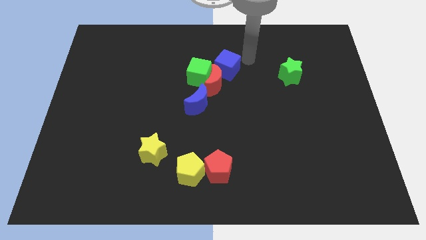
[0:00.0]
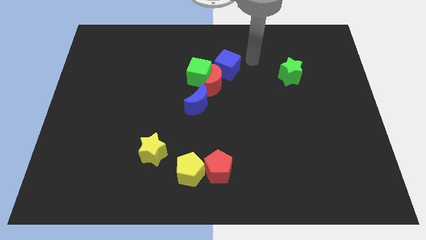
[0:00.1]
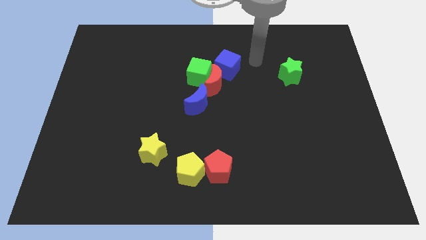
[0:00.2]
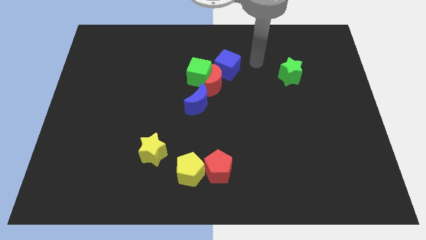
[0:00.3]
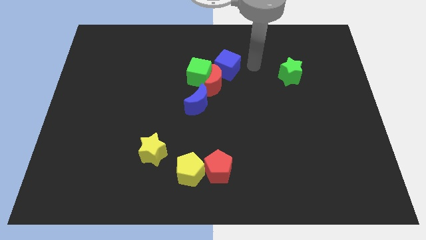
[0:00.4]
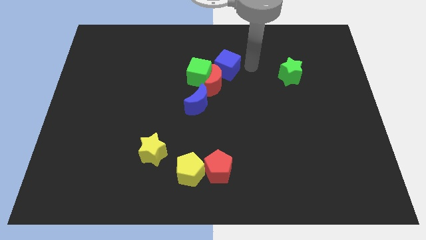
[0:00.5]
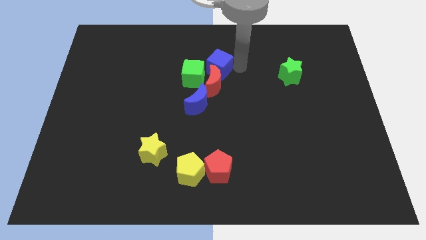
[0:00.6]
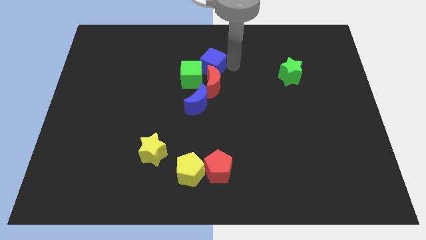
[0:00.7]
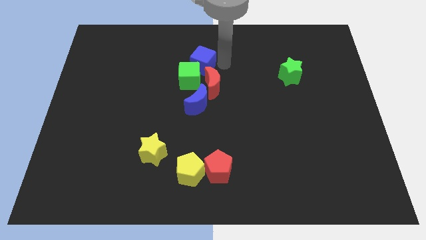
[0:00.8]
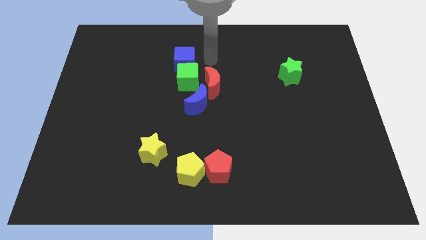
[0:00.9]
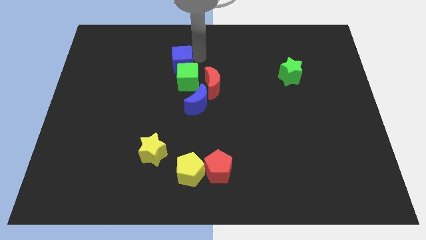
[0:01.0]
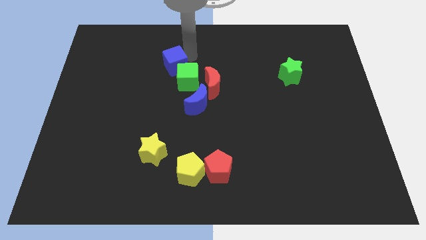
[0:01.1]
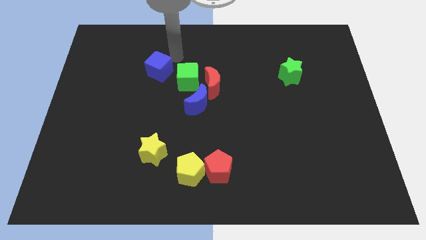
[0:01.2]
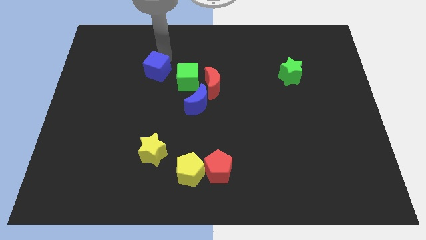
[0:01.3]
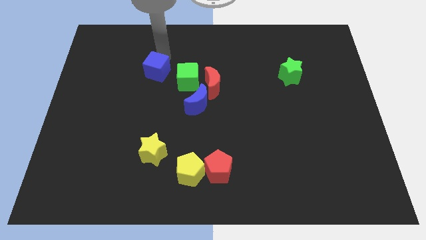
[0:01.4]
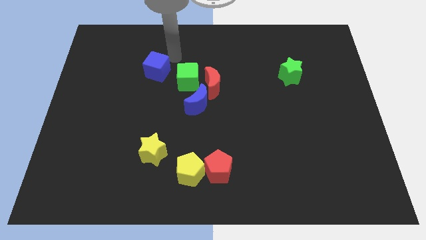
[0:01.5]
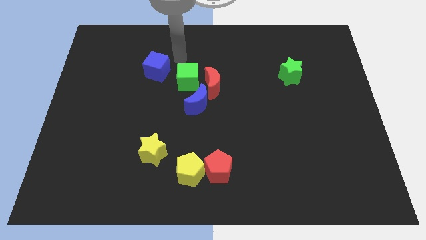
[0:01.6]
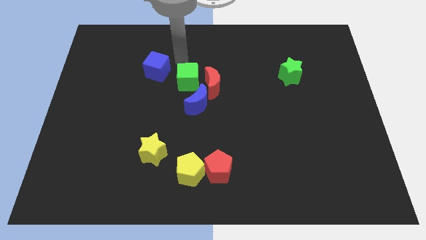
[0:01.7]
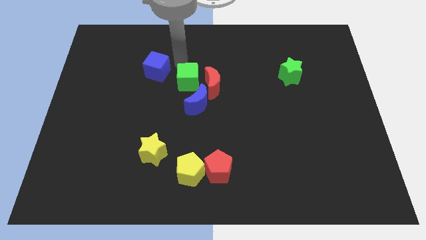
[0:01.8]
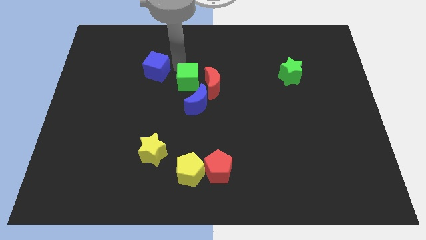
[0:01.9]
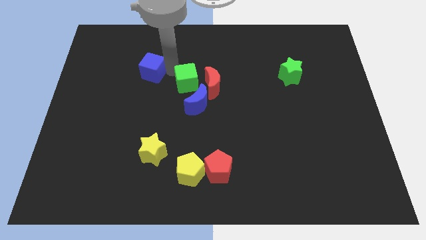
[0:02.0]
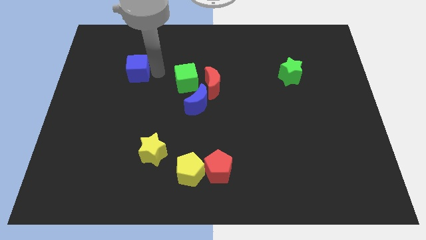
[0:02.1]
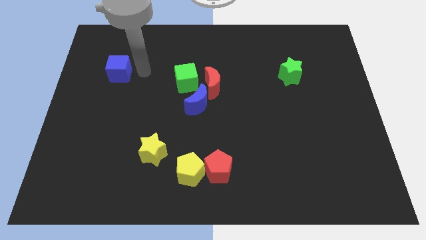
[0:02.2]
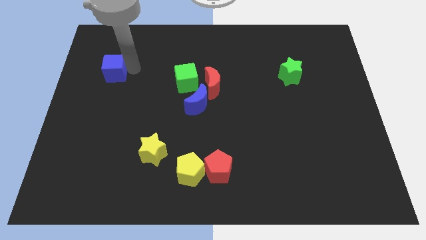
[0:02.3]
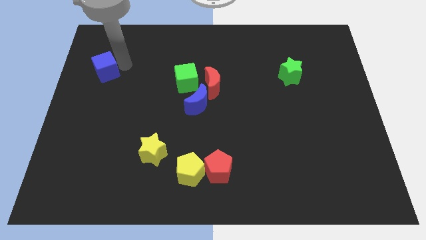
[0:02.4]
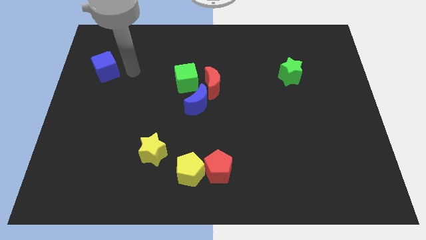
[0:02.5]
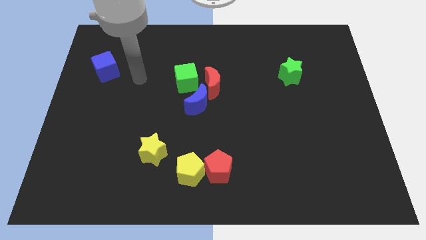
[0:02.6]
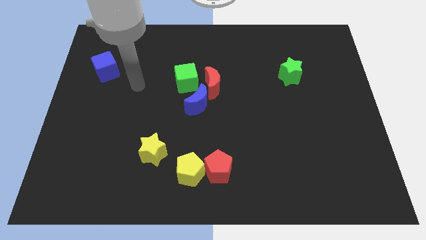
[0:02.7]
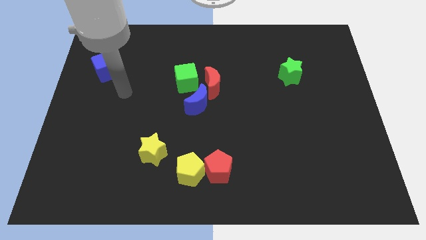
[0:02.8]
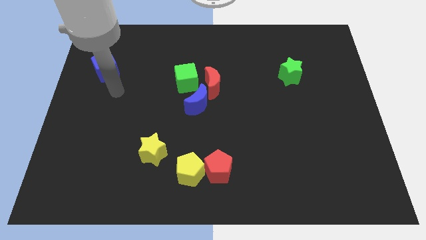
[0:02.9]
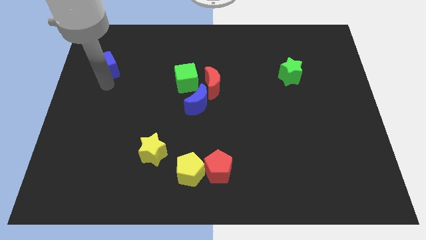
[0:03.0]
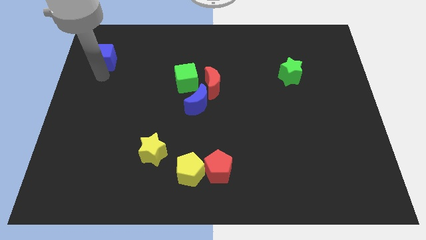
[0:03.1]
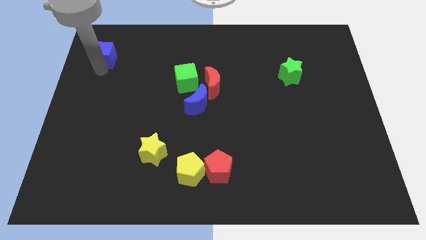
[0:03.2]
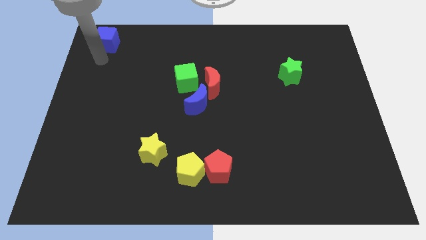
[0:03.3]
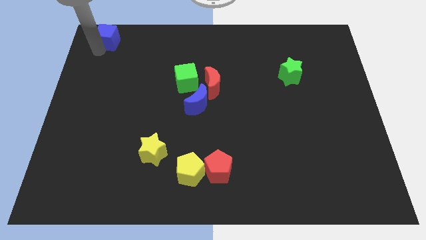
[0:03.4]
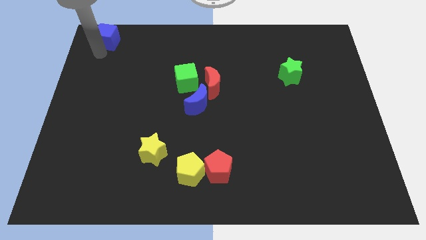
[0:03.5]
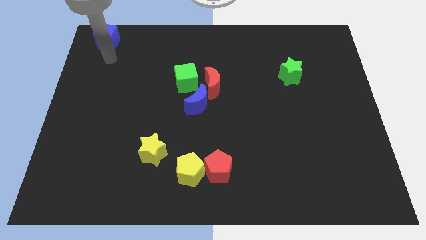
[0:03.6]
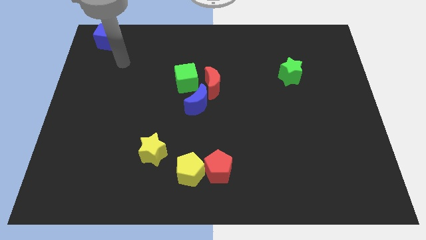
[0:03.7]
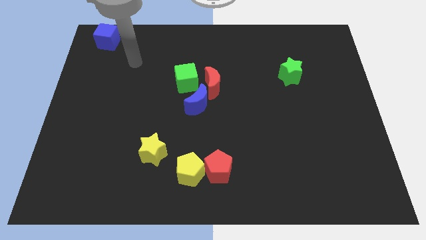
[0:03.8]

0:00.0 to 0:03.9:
move blue cube towards the top left of the board

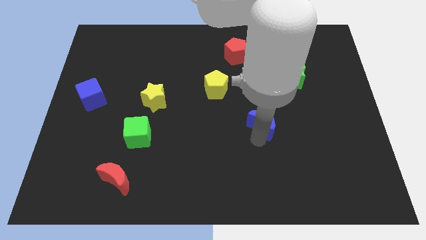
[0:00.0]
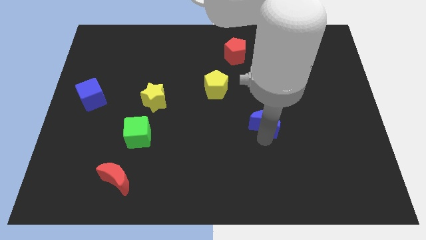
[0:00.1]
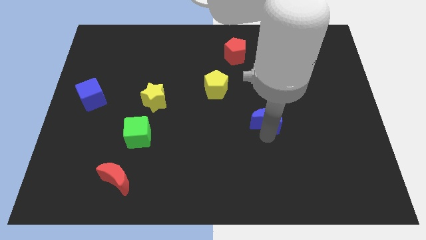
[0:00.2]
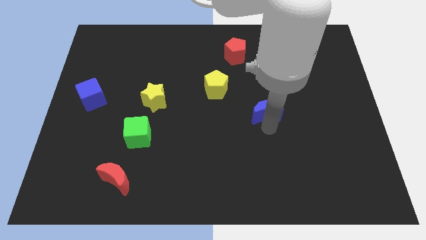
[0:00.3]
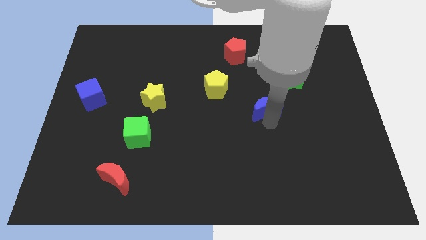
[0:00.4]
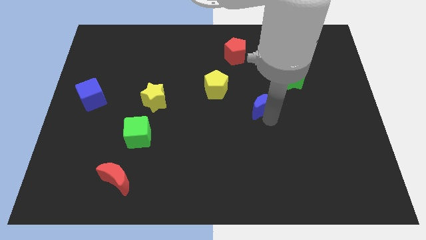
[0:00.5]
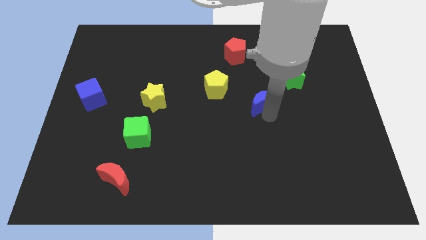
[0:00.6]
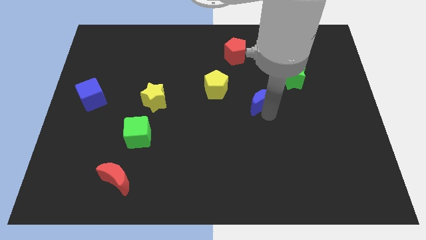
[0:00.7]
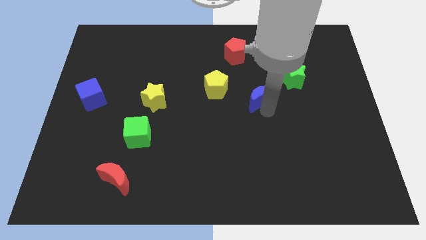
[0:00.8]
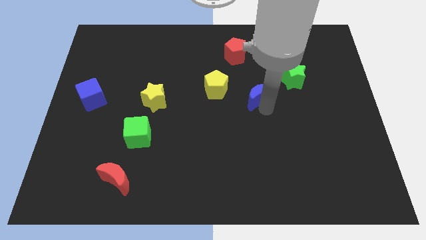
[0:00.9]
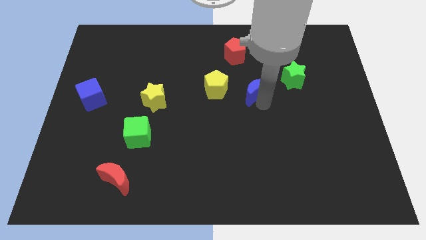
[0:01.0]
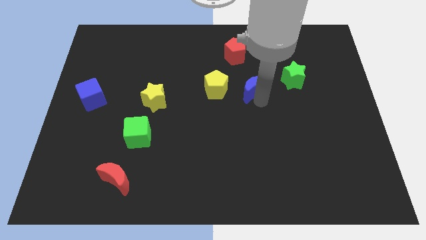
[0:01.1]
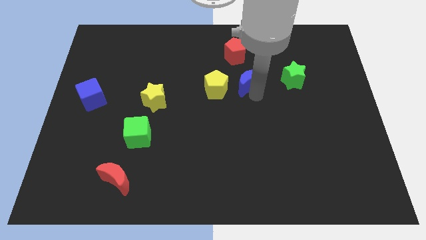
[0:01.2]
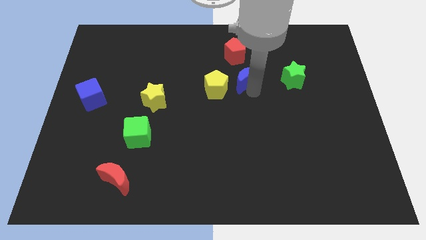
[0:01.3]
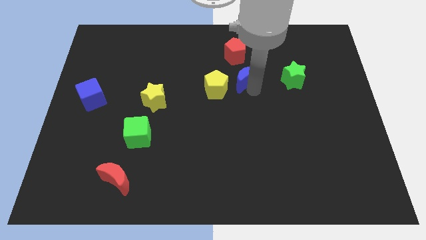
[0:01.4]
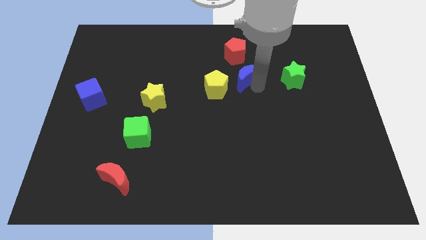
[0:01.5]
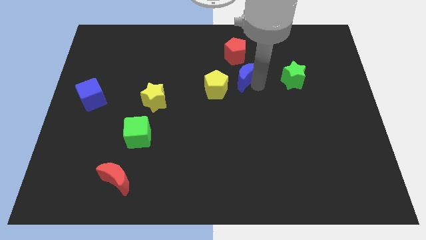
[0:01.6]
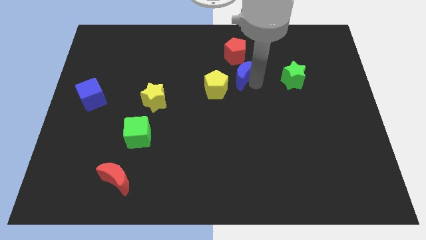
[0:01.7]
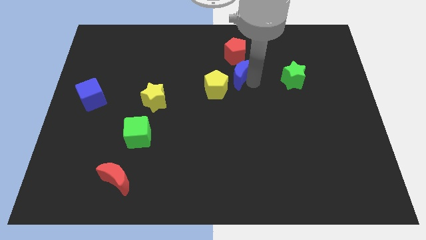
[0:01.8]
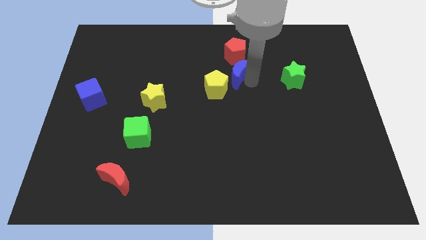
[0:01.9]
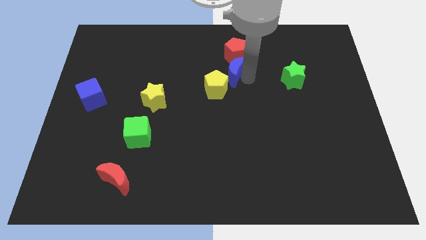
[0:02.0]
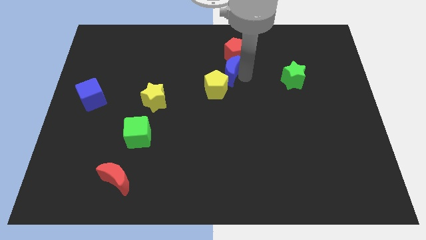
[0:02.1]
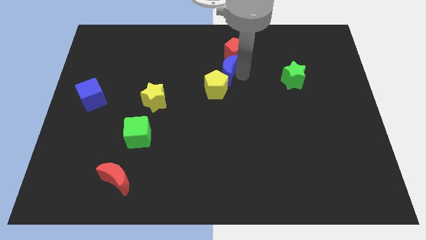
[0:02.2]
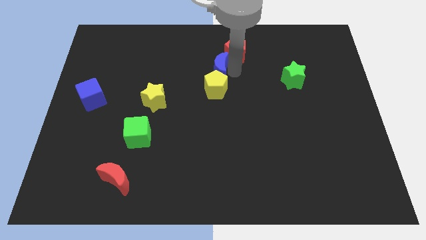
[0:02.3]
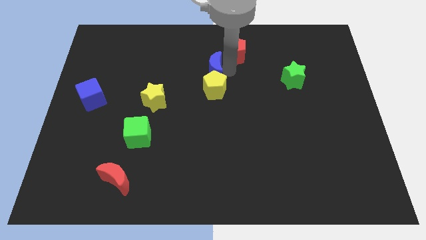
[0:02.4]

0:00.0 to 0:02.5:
place the blue moon above the yellow pentagon

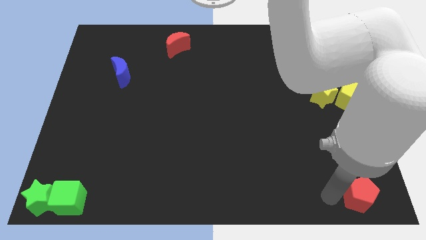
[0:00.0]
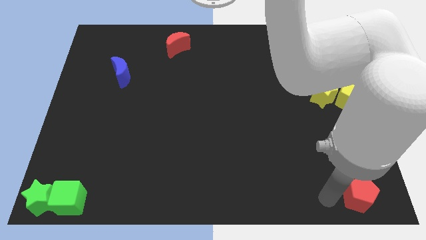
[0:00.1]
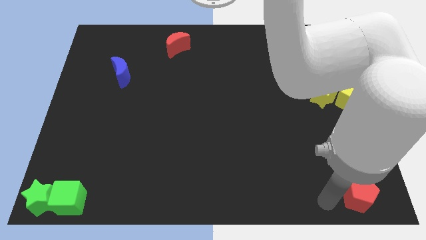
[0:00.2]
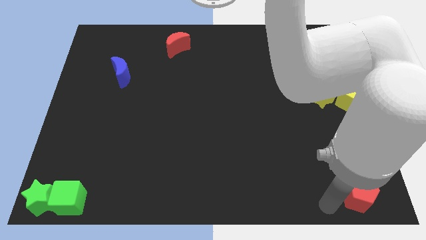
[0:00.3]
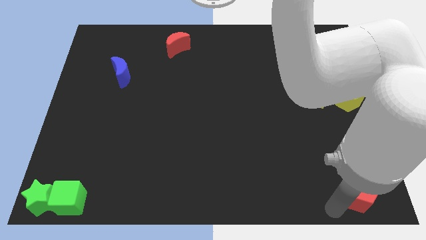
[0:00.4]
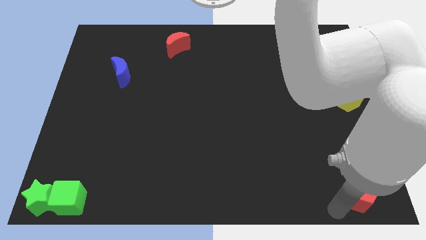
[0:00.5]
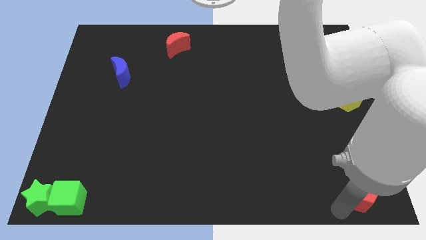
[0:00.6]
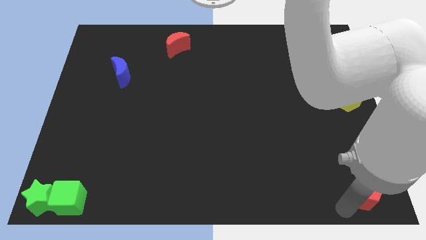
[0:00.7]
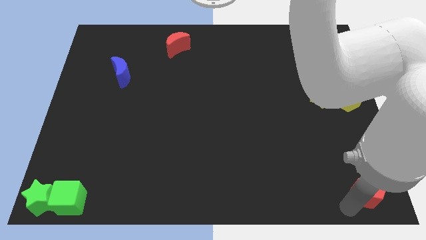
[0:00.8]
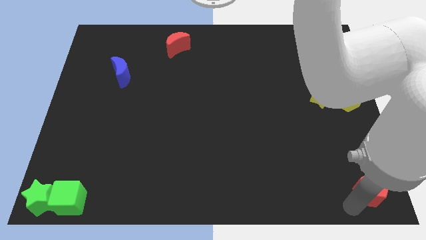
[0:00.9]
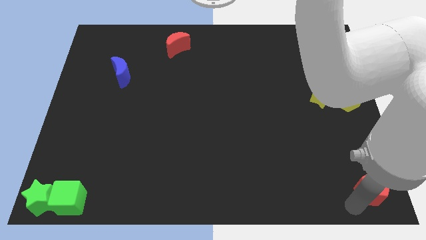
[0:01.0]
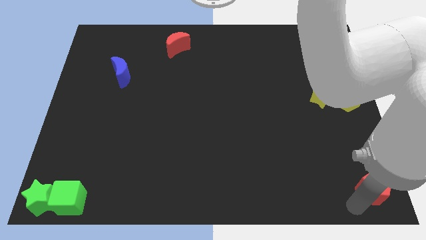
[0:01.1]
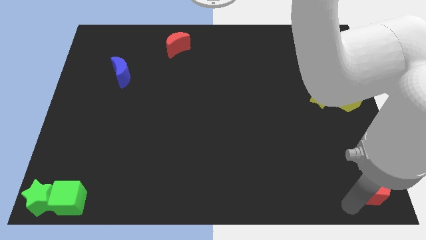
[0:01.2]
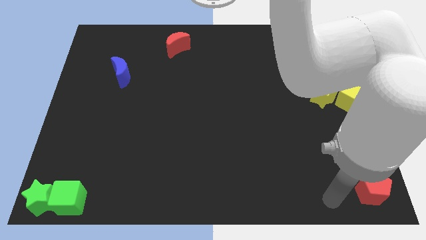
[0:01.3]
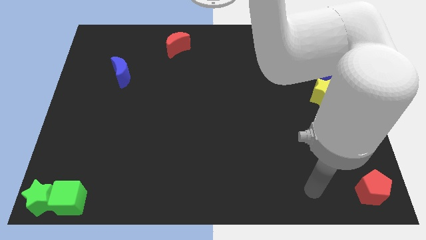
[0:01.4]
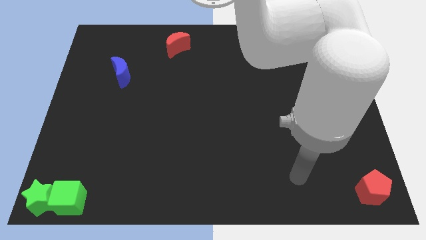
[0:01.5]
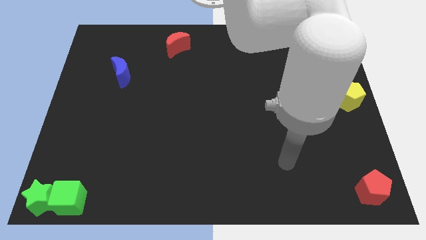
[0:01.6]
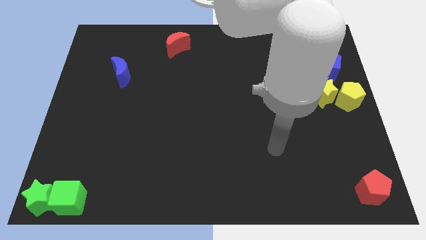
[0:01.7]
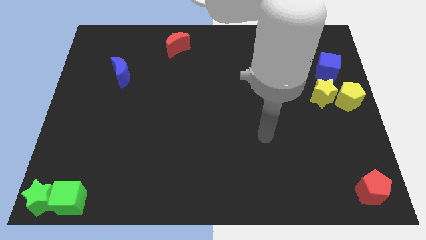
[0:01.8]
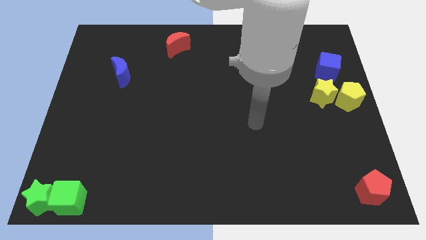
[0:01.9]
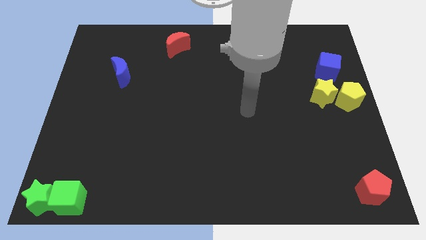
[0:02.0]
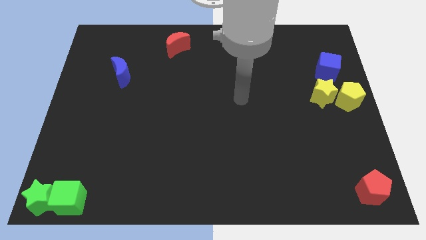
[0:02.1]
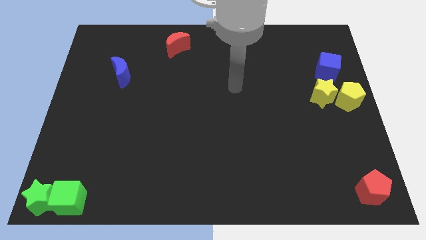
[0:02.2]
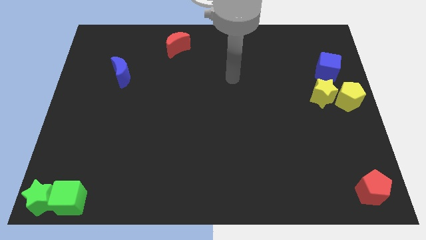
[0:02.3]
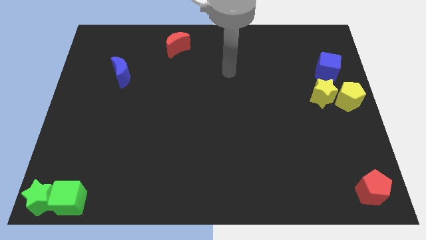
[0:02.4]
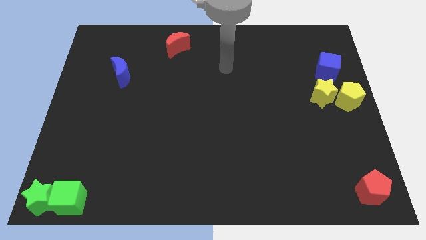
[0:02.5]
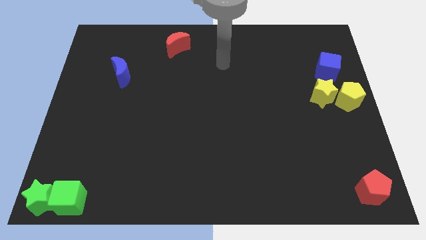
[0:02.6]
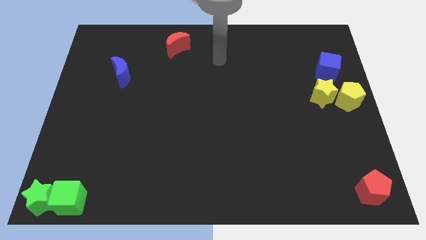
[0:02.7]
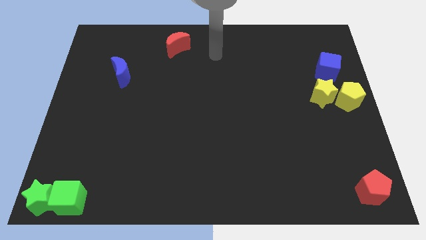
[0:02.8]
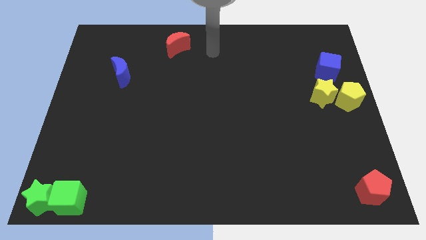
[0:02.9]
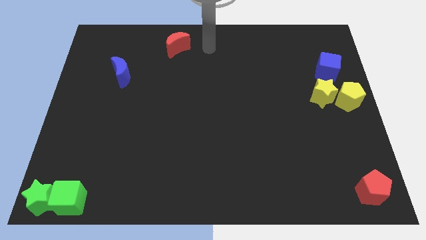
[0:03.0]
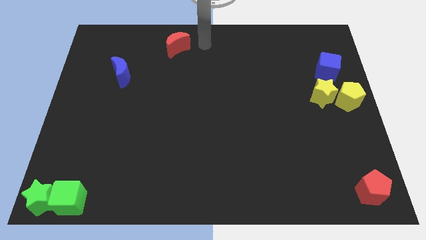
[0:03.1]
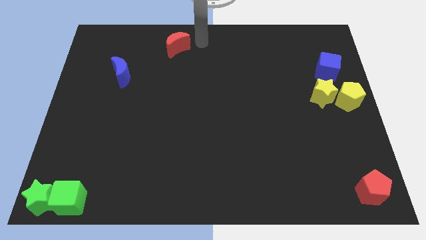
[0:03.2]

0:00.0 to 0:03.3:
place the red pentagon to the bottom right corner
